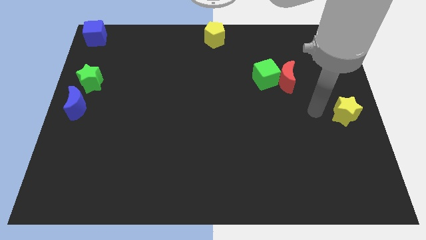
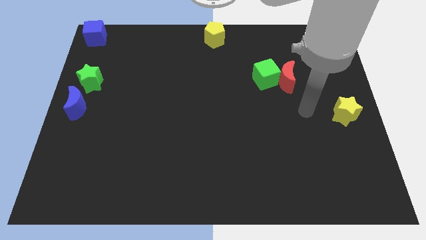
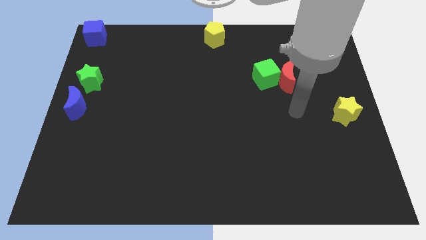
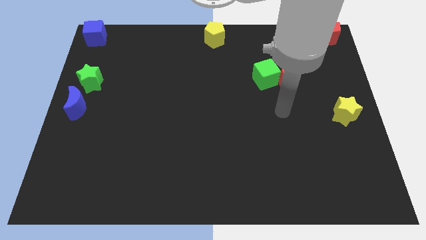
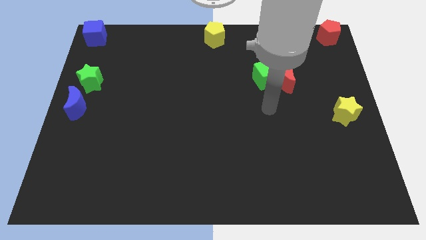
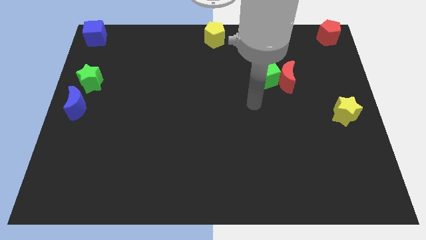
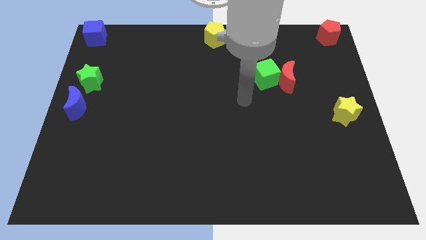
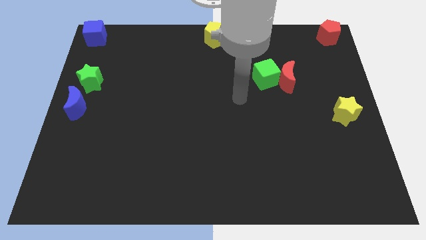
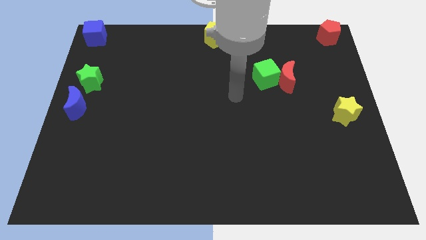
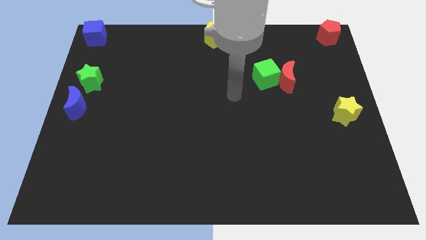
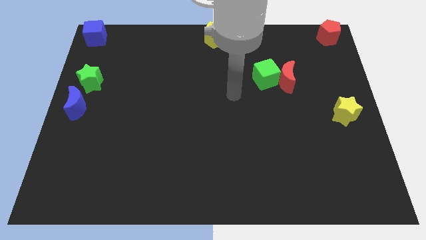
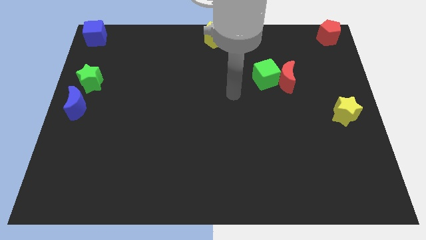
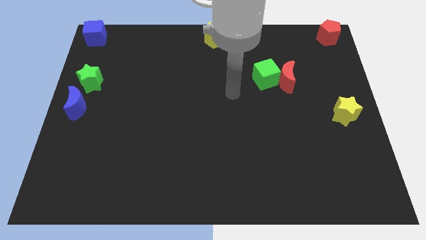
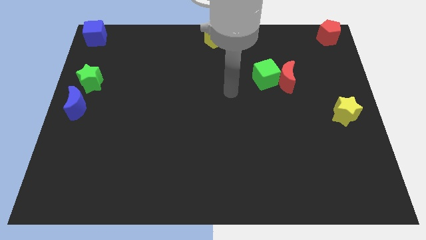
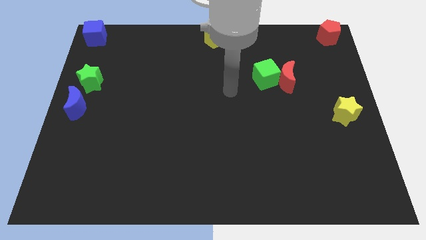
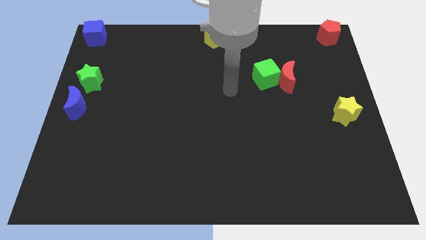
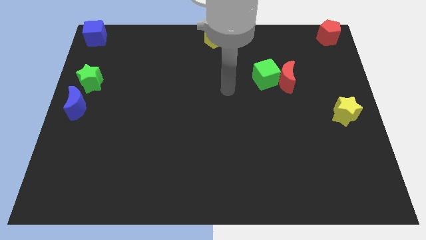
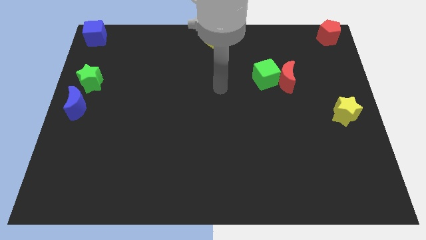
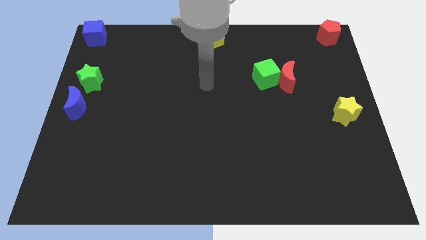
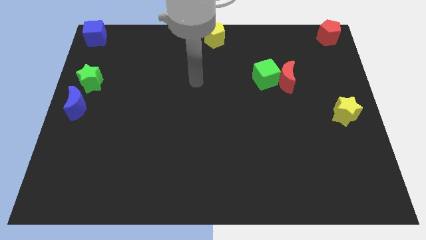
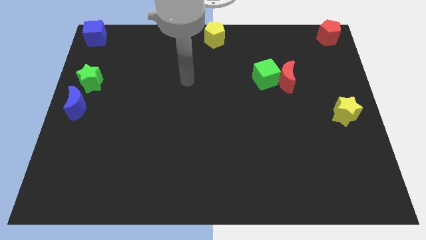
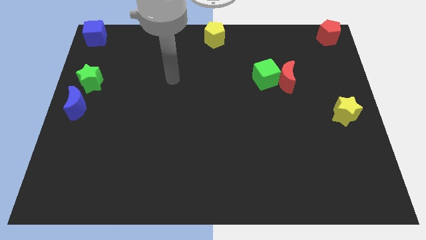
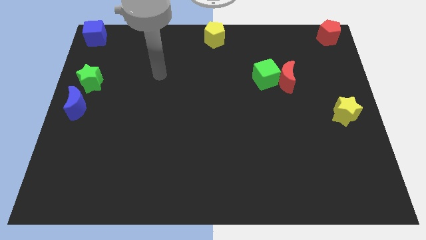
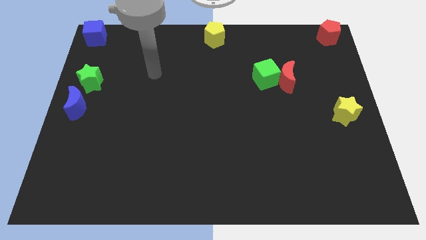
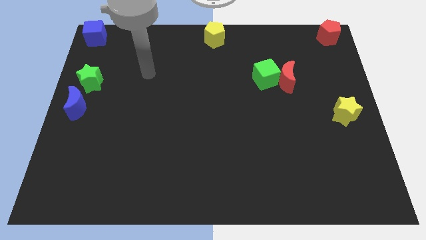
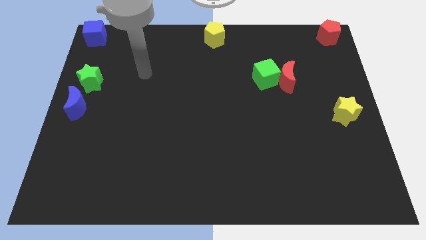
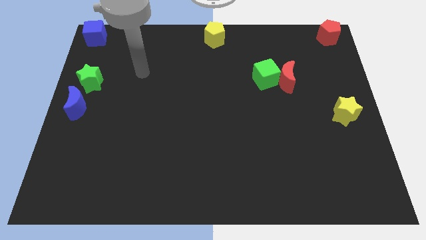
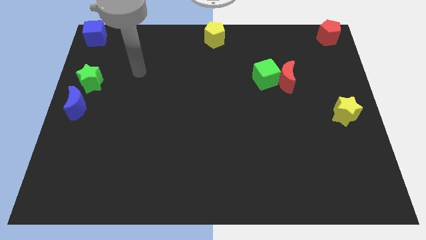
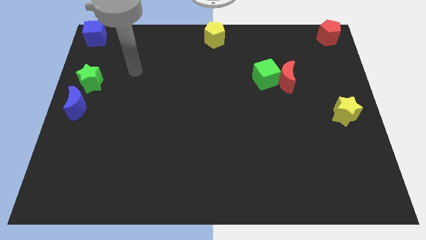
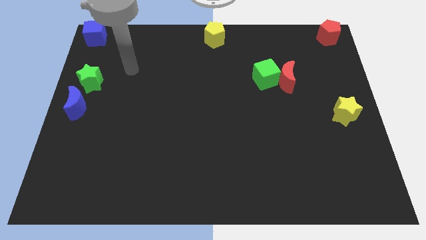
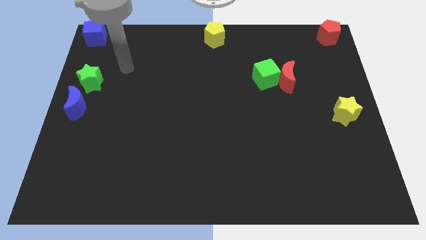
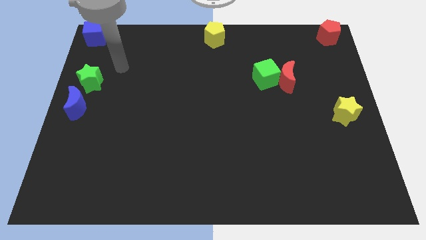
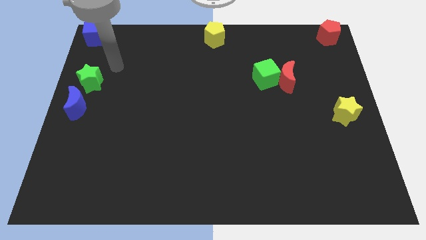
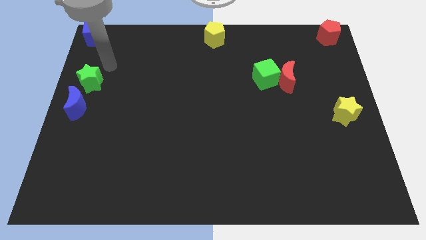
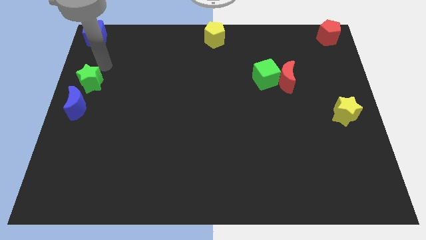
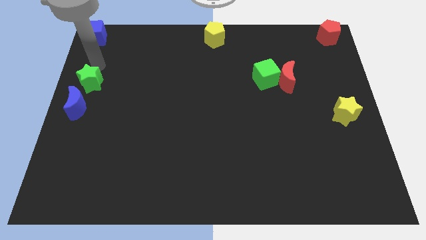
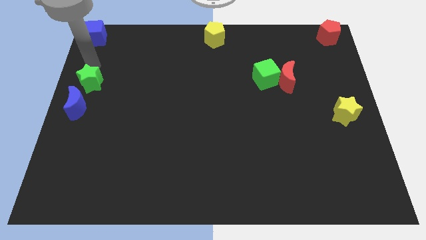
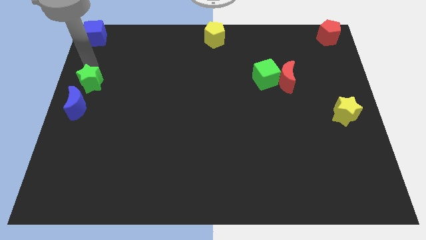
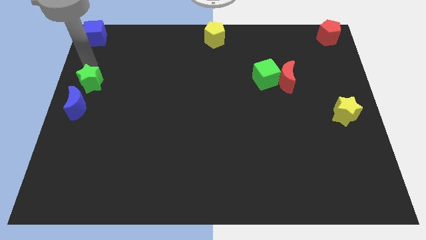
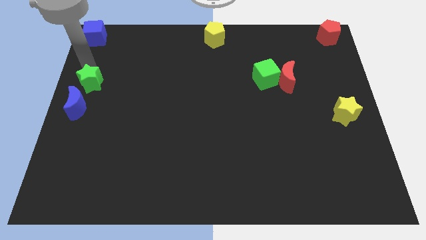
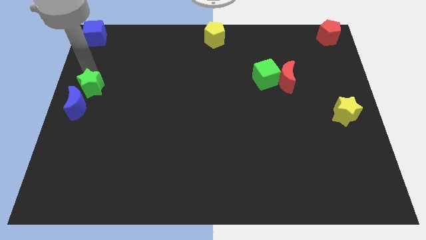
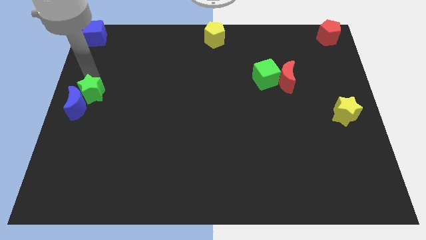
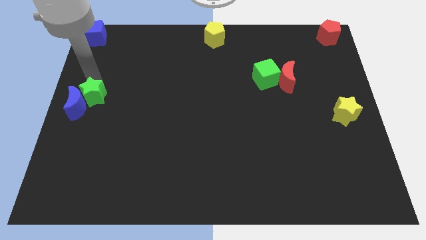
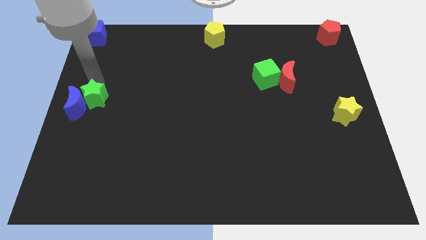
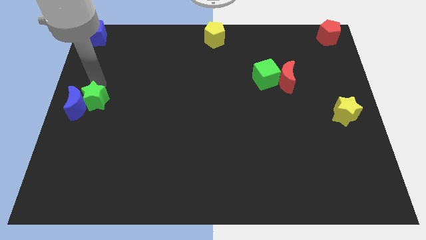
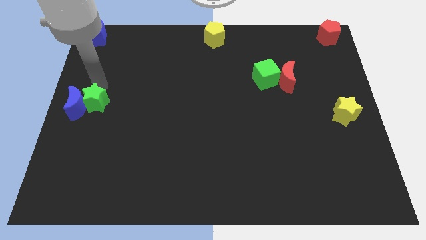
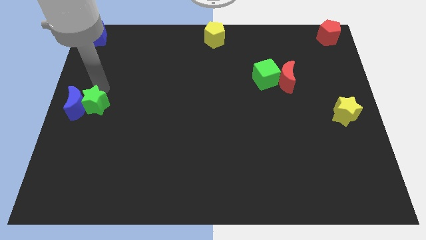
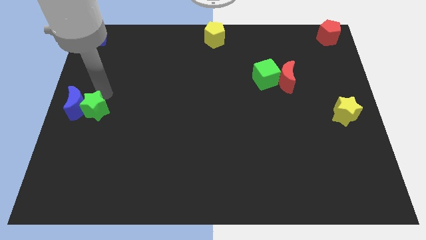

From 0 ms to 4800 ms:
slide the green star close to the right side of the blue crescent

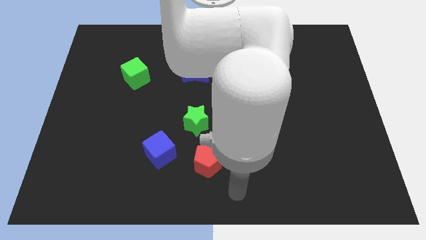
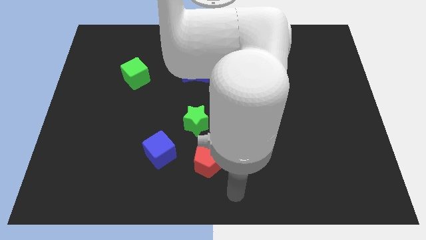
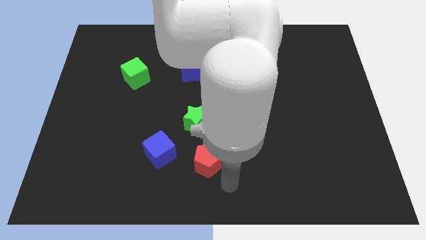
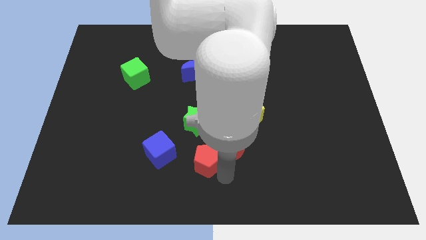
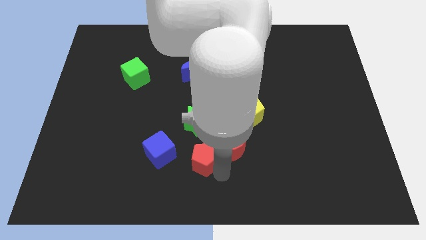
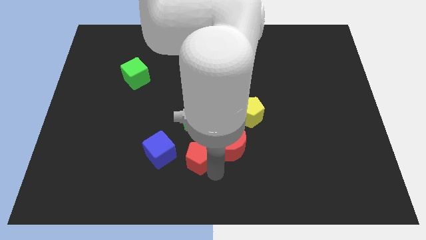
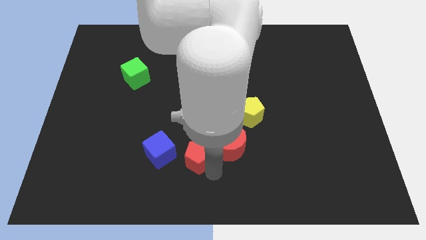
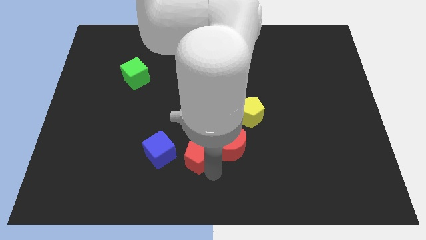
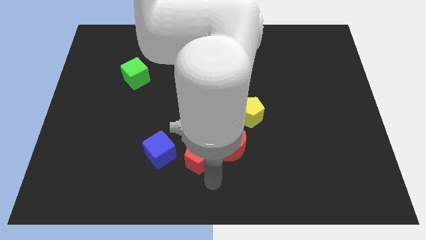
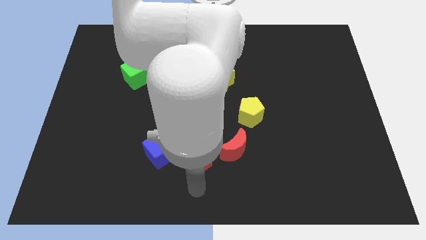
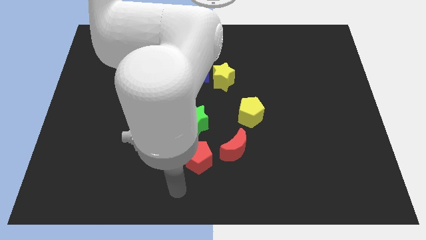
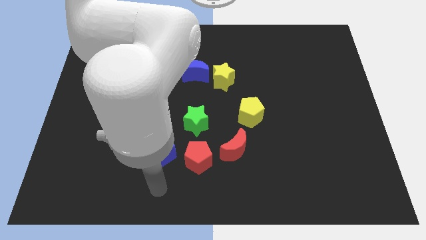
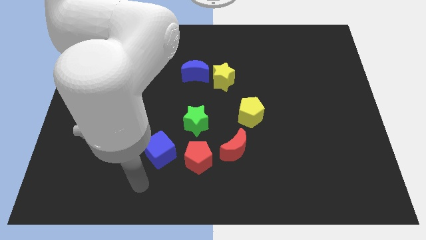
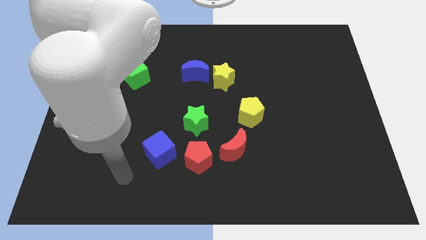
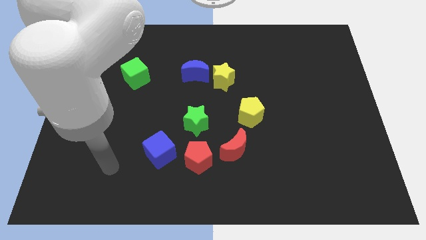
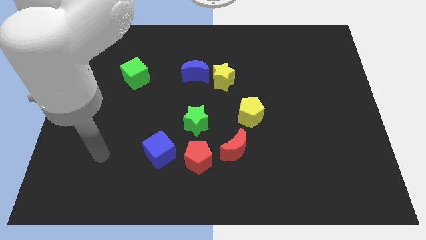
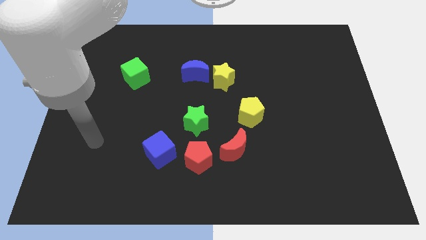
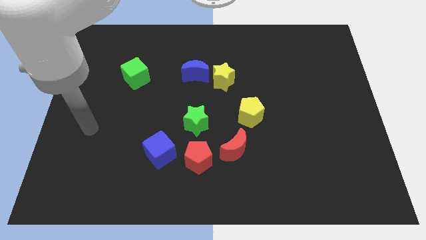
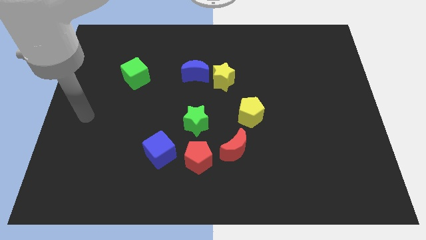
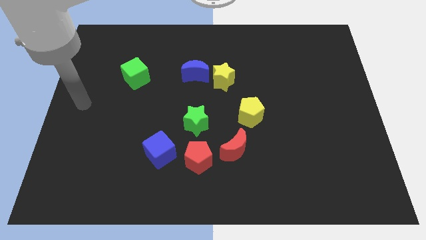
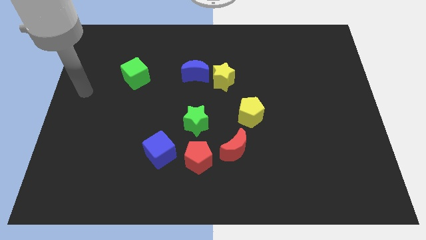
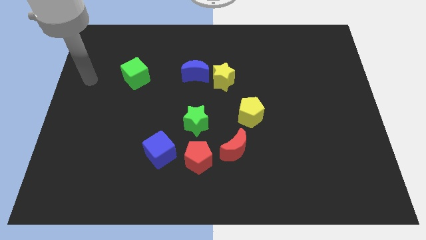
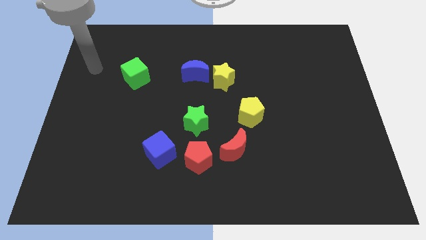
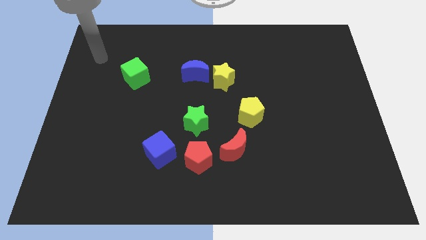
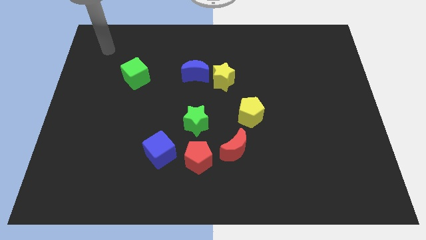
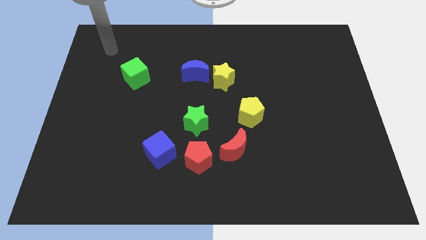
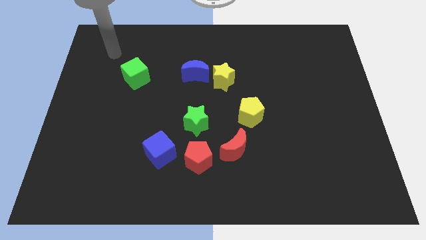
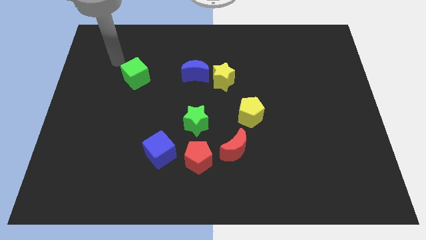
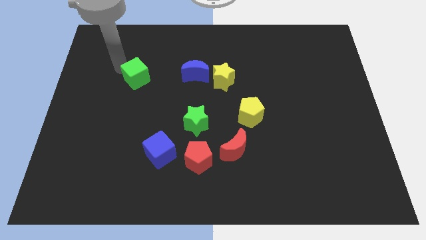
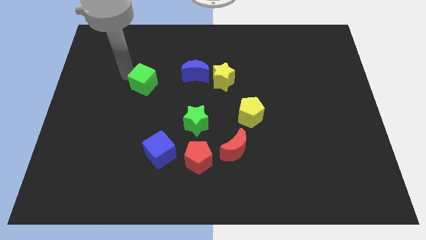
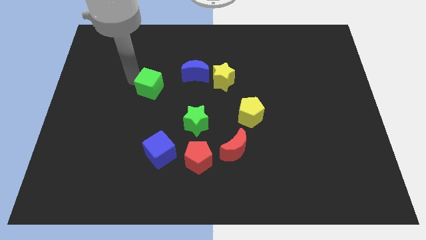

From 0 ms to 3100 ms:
push the green cube towards the green star

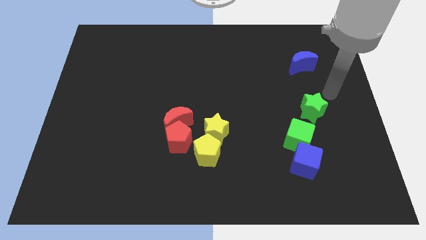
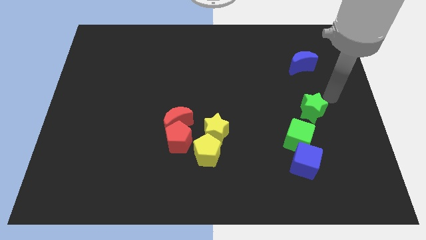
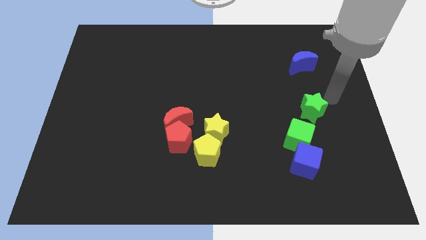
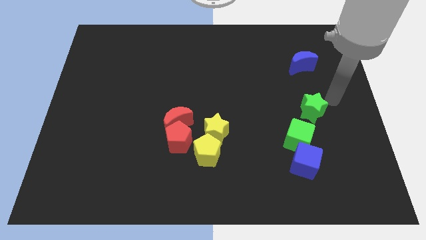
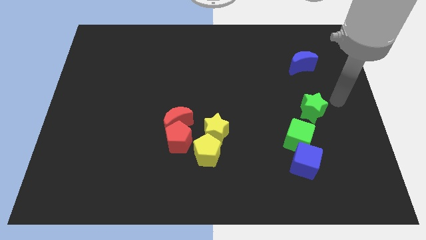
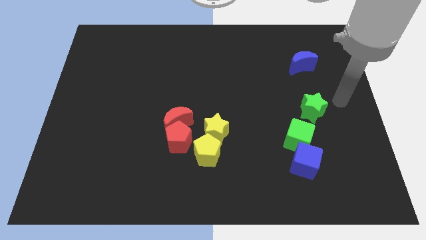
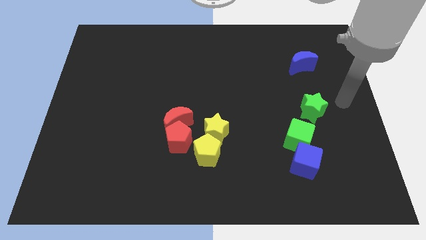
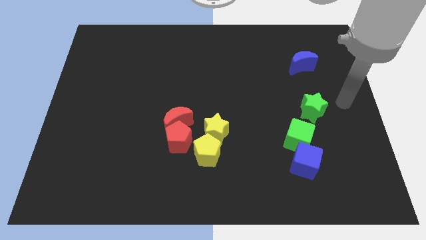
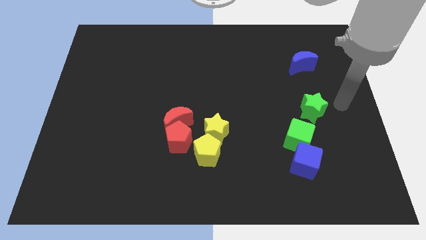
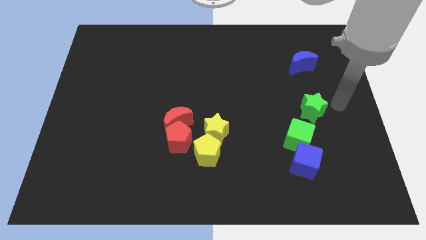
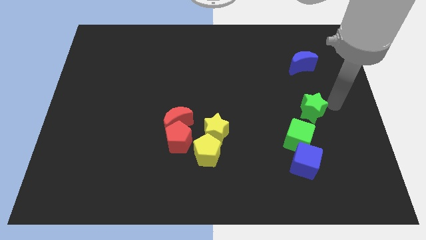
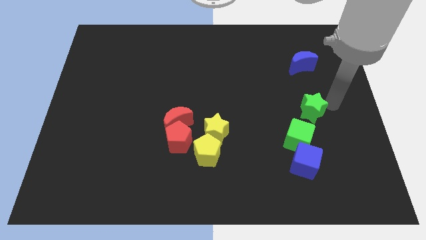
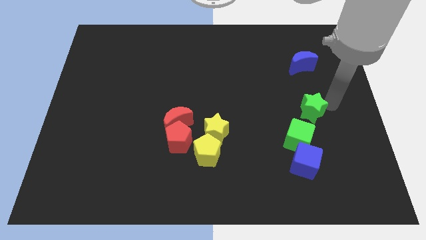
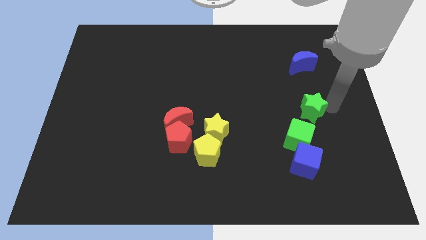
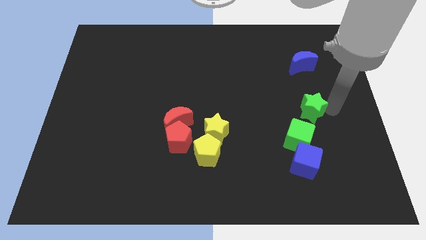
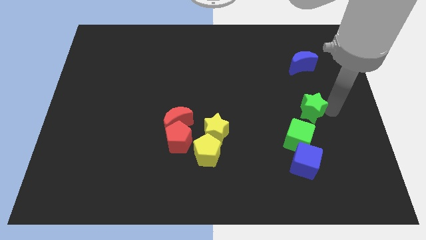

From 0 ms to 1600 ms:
point your arm to the right of the green star
